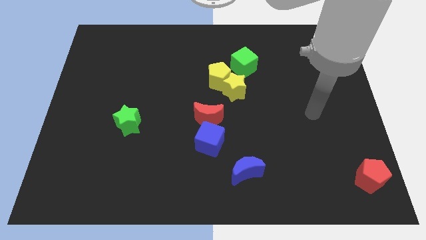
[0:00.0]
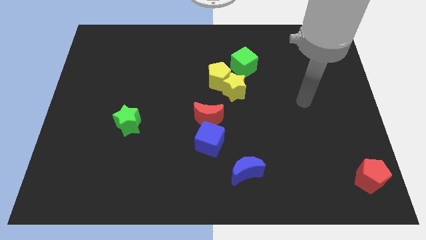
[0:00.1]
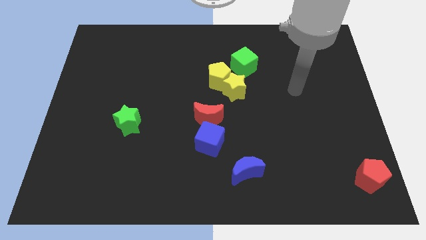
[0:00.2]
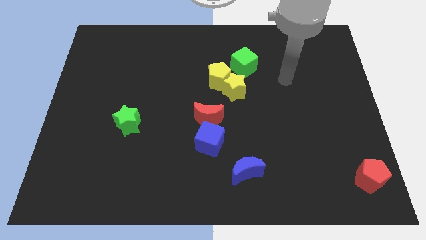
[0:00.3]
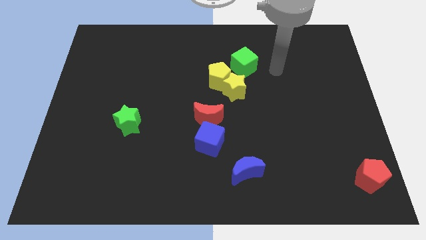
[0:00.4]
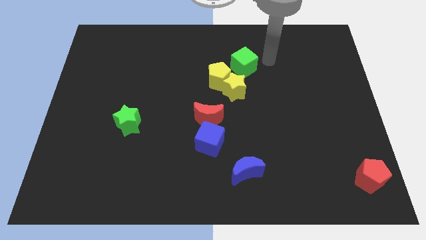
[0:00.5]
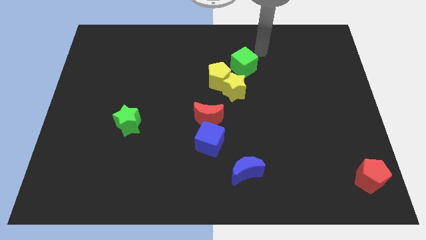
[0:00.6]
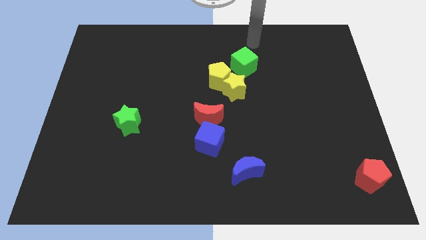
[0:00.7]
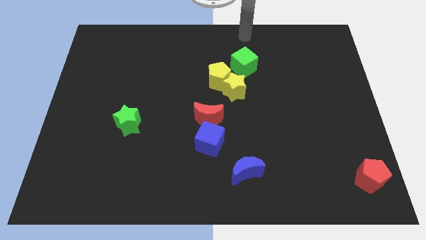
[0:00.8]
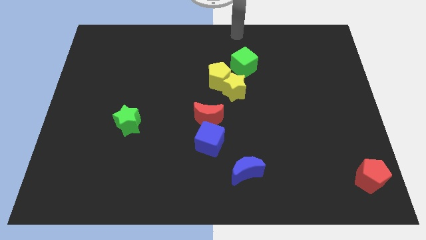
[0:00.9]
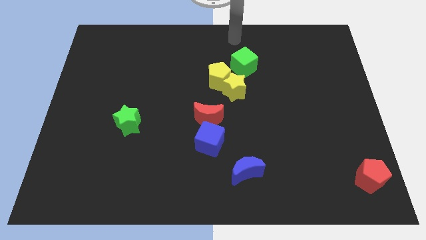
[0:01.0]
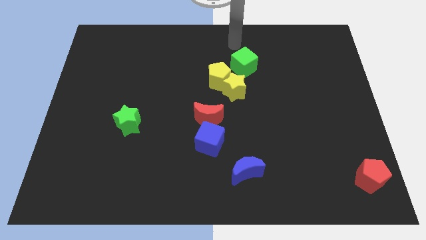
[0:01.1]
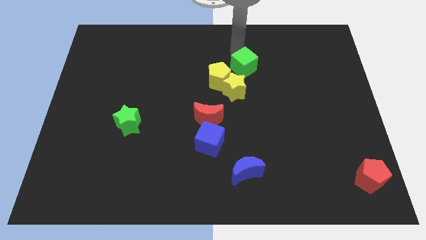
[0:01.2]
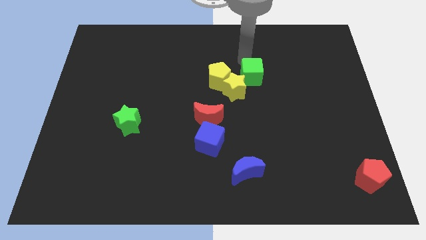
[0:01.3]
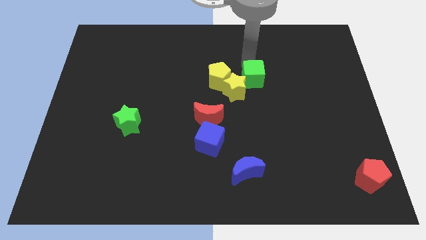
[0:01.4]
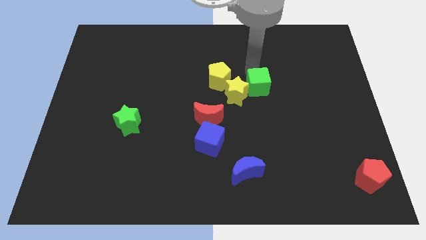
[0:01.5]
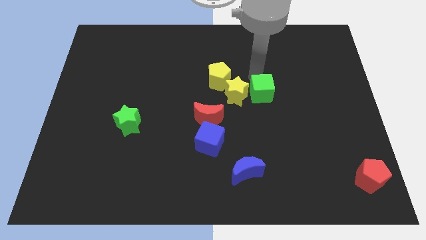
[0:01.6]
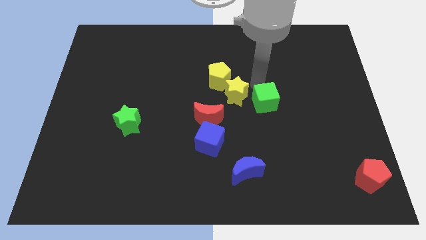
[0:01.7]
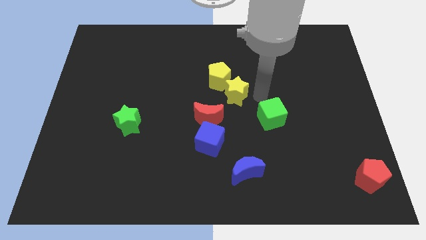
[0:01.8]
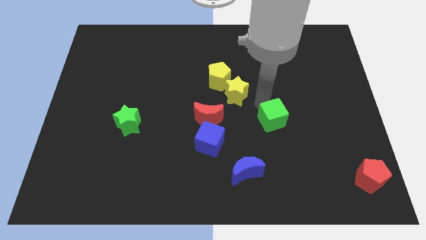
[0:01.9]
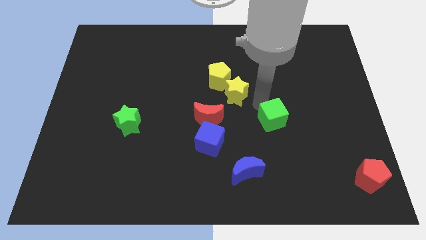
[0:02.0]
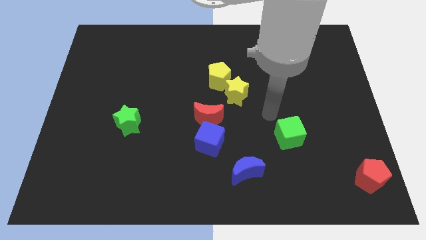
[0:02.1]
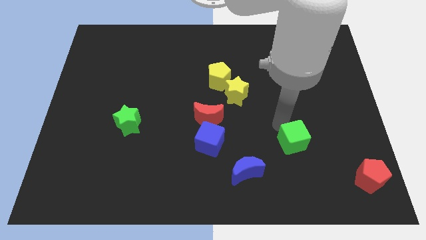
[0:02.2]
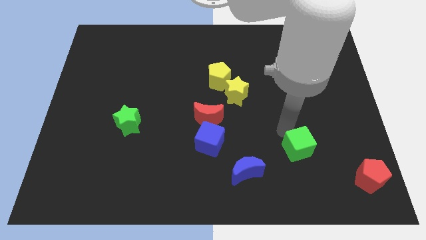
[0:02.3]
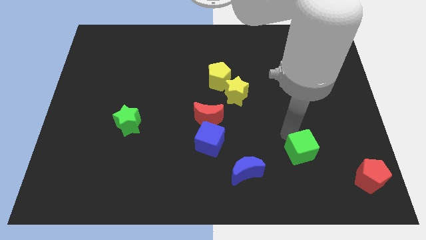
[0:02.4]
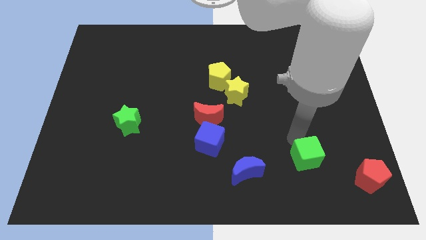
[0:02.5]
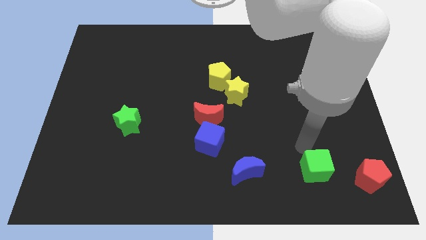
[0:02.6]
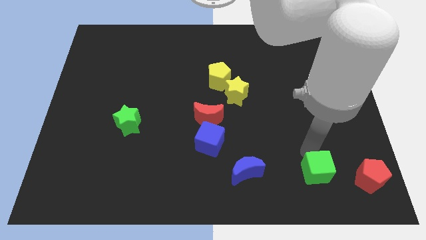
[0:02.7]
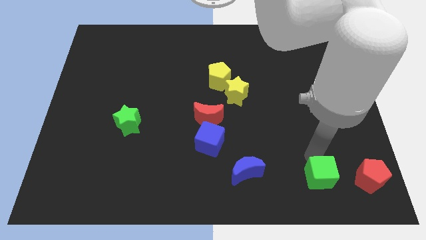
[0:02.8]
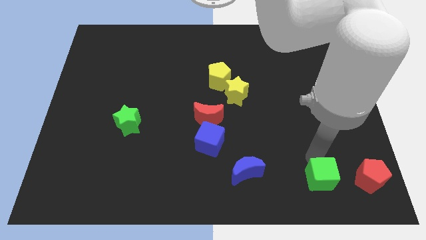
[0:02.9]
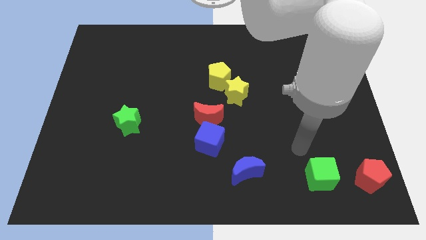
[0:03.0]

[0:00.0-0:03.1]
separate green cube from yellow star

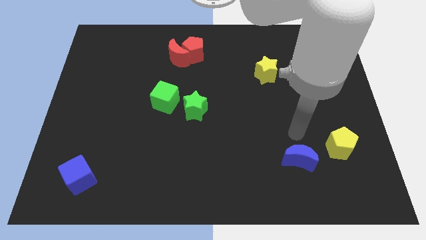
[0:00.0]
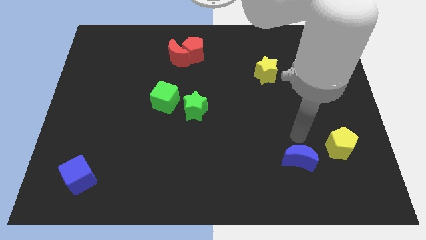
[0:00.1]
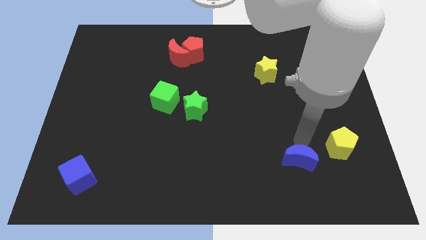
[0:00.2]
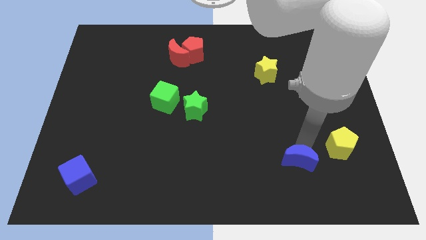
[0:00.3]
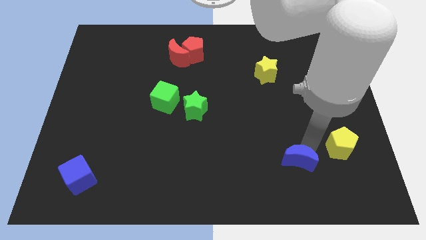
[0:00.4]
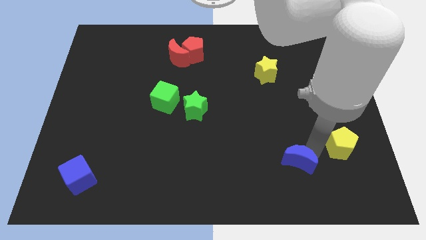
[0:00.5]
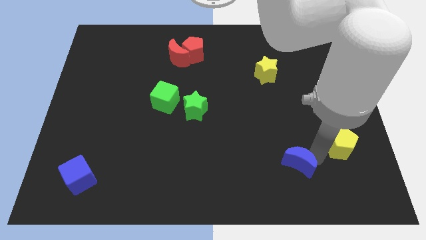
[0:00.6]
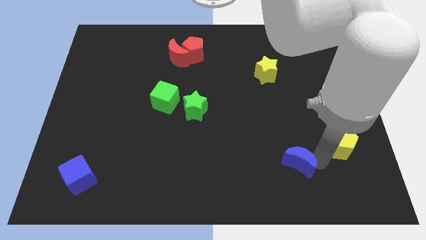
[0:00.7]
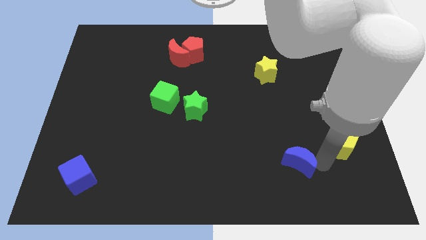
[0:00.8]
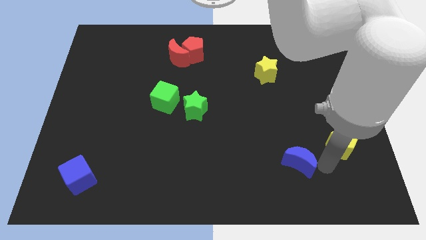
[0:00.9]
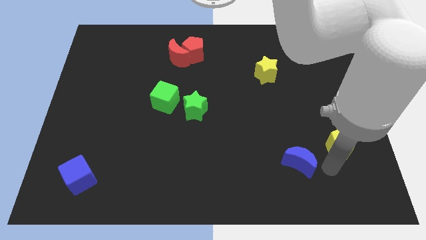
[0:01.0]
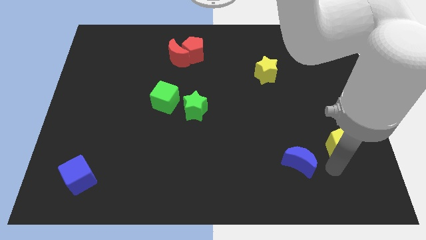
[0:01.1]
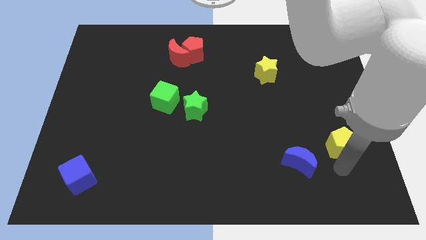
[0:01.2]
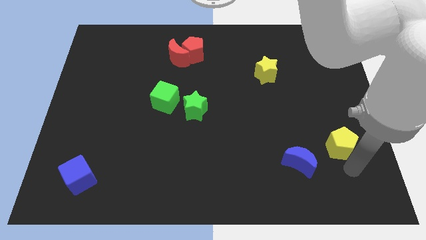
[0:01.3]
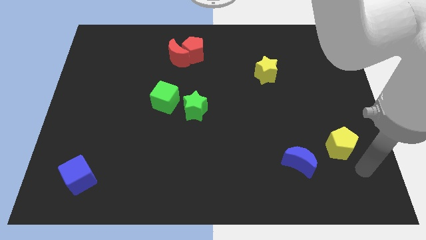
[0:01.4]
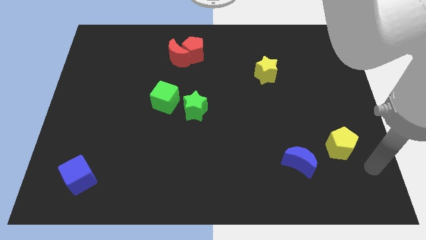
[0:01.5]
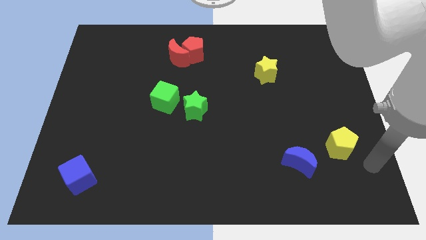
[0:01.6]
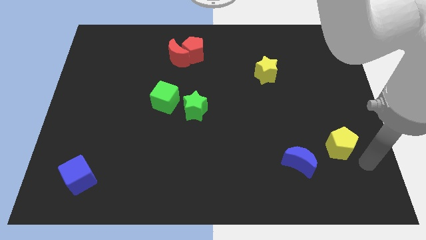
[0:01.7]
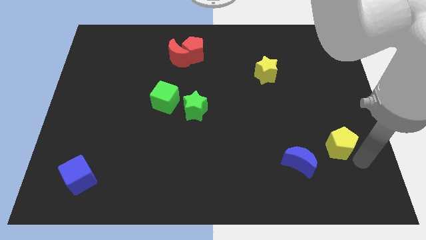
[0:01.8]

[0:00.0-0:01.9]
move arm to the right of yellow pentagon

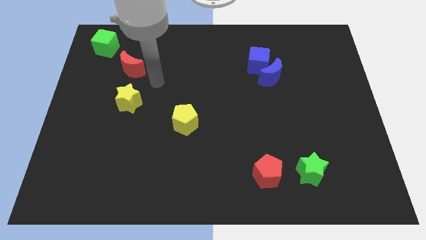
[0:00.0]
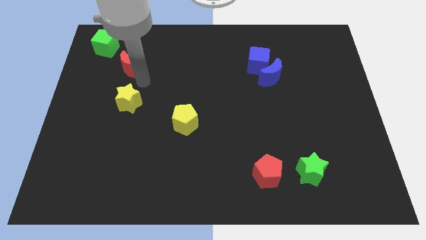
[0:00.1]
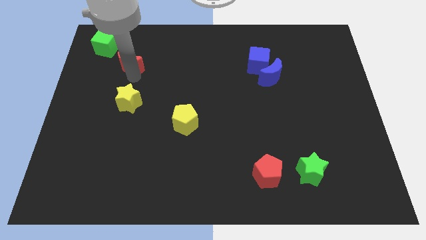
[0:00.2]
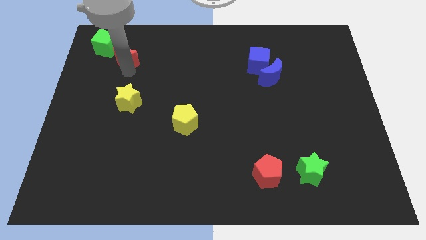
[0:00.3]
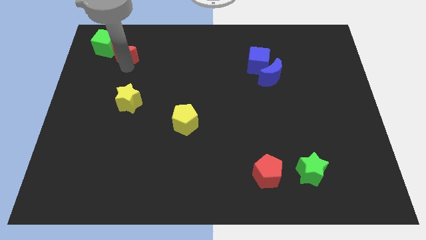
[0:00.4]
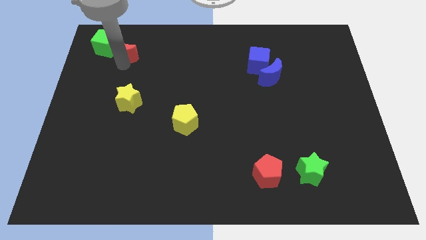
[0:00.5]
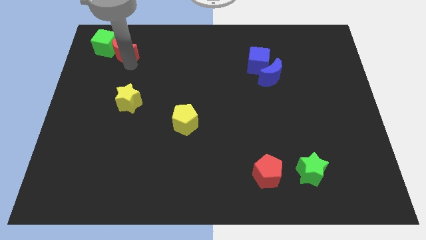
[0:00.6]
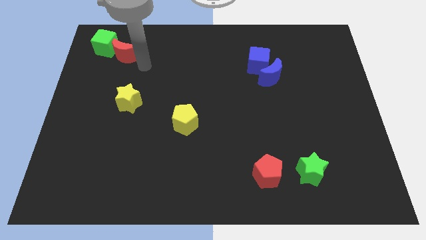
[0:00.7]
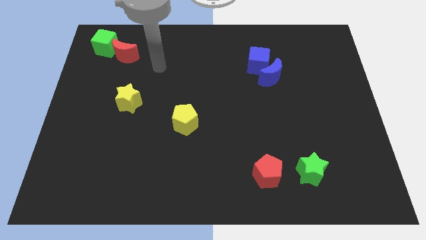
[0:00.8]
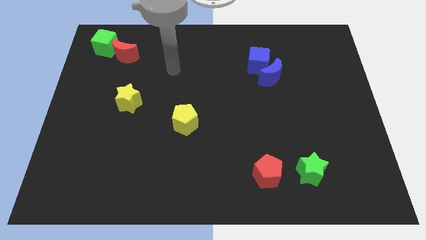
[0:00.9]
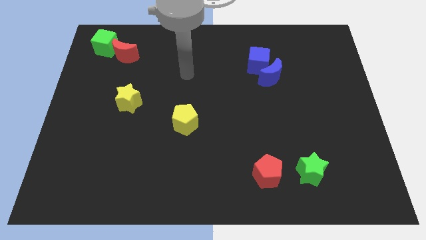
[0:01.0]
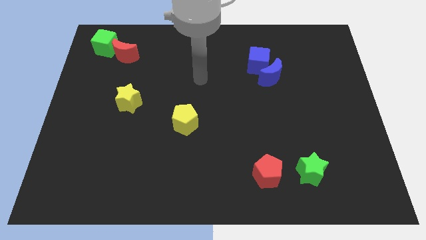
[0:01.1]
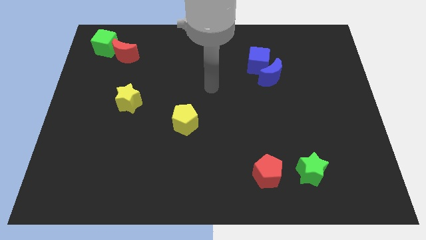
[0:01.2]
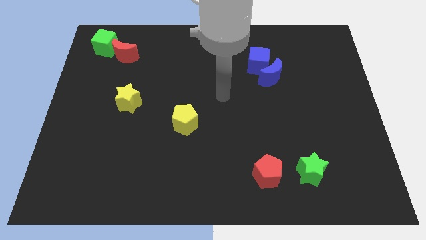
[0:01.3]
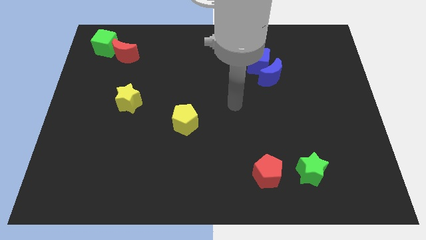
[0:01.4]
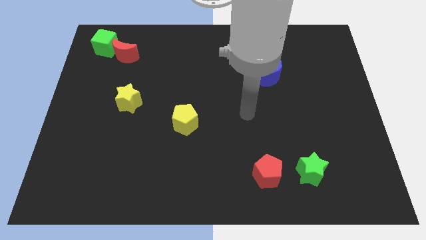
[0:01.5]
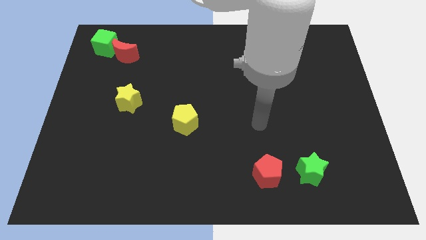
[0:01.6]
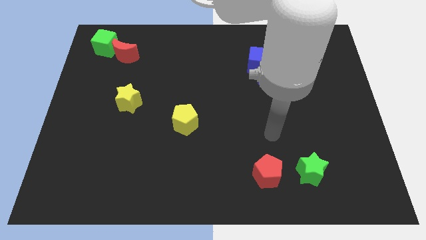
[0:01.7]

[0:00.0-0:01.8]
push the red moon close to green cube

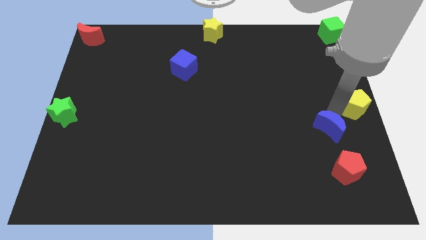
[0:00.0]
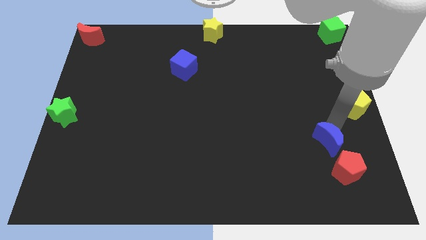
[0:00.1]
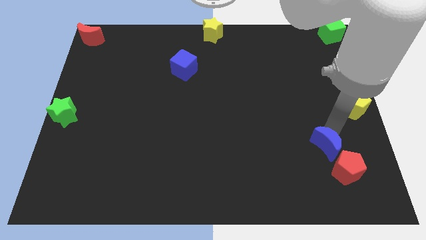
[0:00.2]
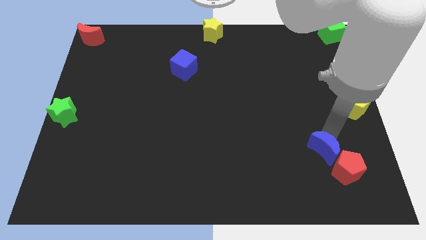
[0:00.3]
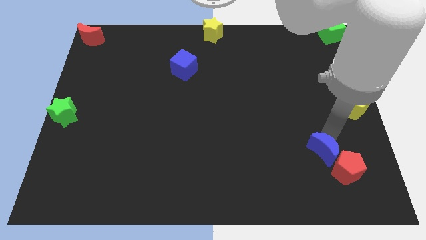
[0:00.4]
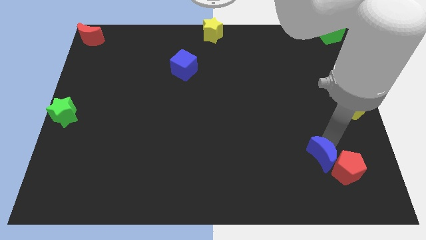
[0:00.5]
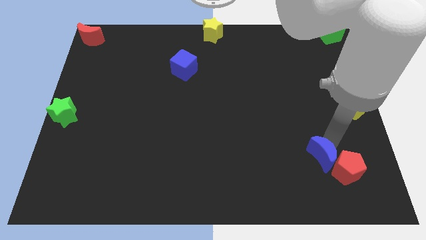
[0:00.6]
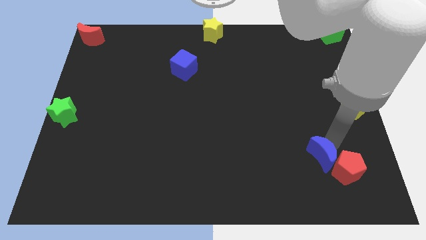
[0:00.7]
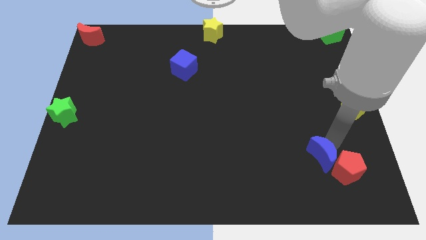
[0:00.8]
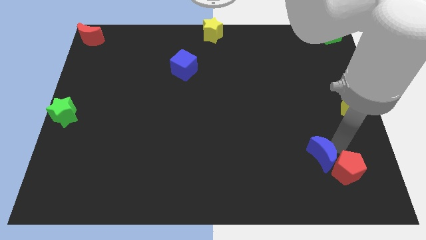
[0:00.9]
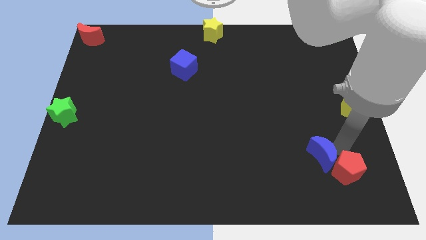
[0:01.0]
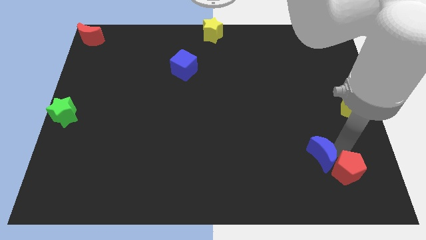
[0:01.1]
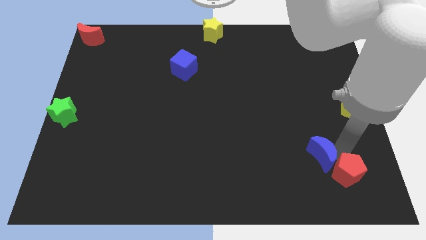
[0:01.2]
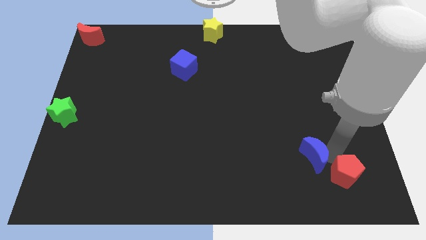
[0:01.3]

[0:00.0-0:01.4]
place the blue moon above the red pentagon

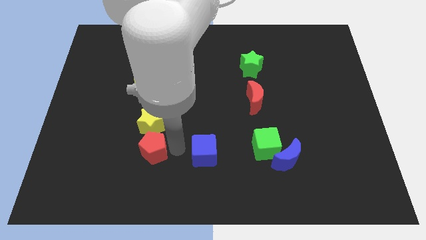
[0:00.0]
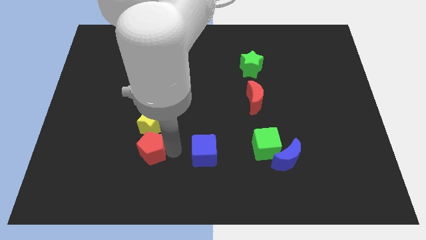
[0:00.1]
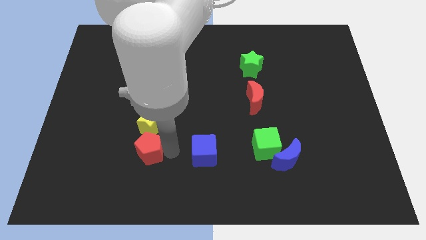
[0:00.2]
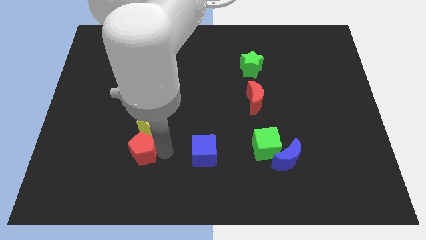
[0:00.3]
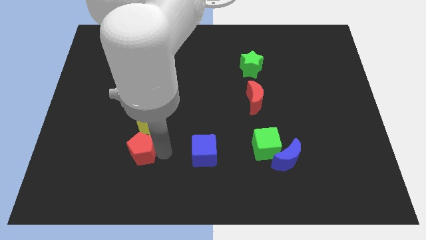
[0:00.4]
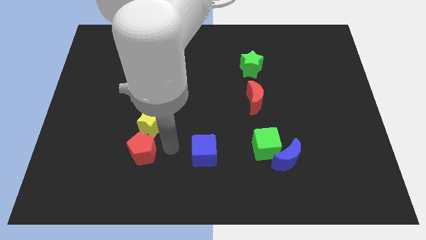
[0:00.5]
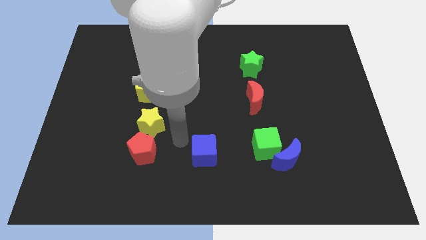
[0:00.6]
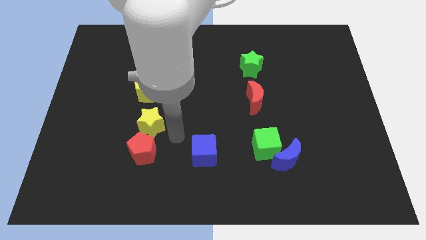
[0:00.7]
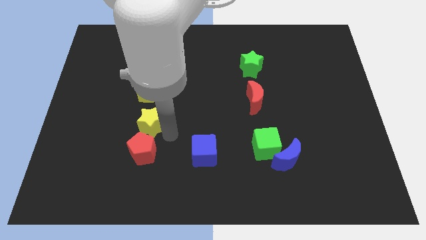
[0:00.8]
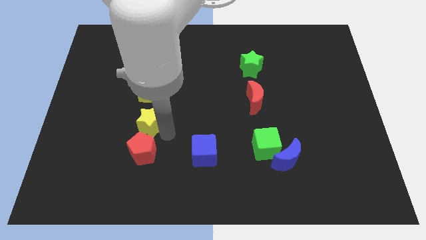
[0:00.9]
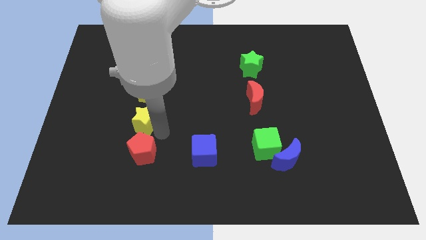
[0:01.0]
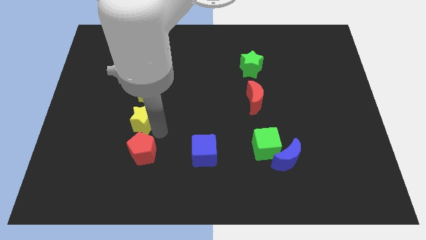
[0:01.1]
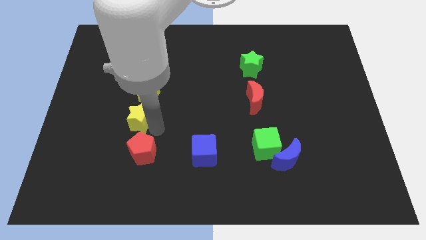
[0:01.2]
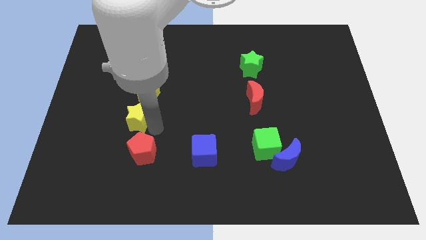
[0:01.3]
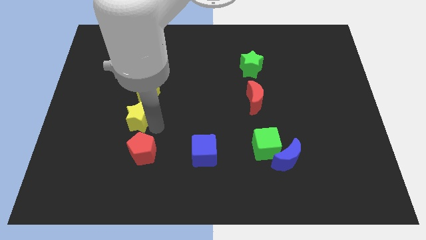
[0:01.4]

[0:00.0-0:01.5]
push the red pentagon and yellow star diagonal to each other
